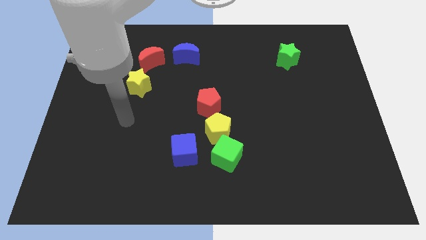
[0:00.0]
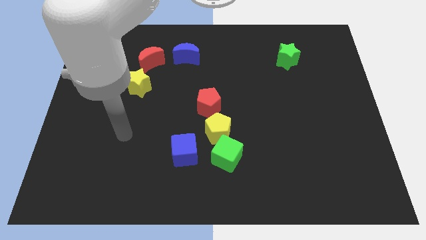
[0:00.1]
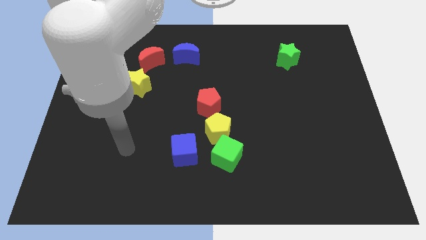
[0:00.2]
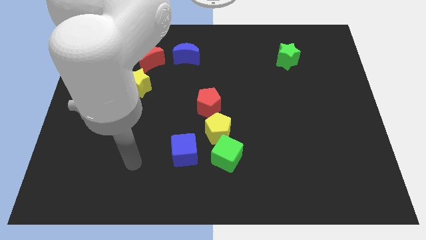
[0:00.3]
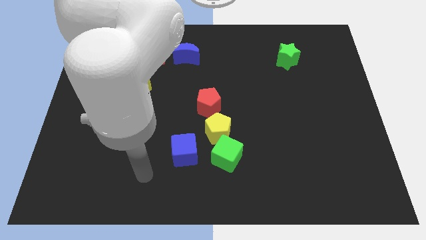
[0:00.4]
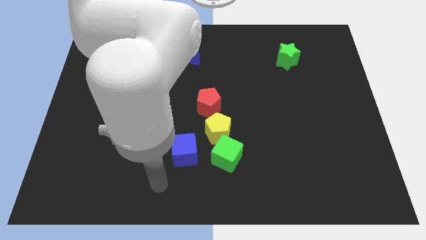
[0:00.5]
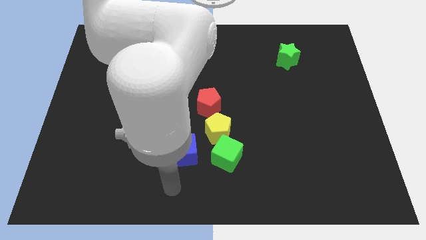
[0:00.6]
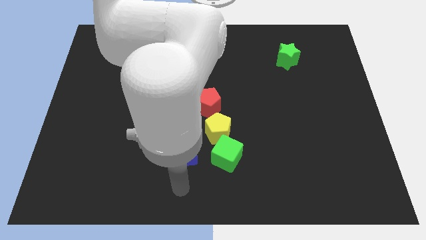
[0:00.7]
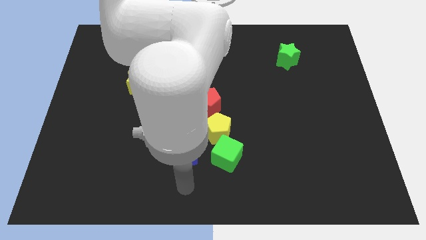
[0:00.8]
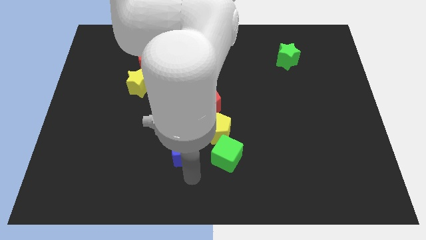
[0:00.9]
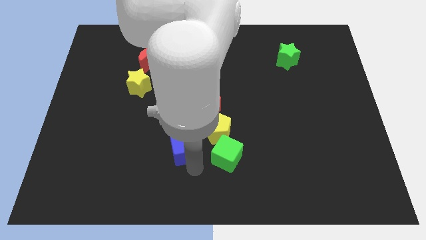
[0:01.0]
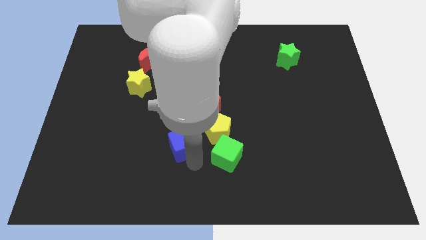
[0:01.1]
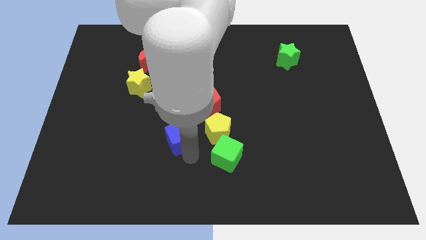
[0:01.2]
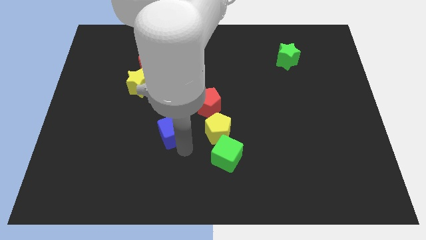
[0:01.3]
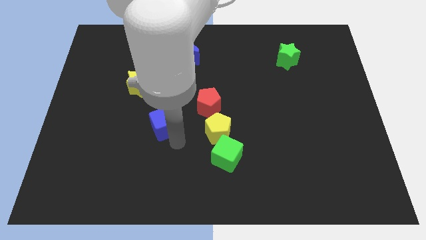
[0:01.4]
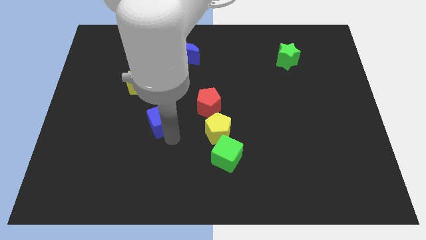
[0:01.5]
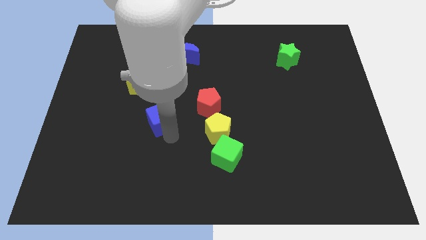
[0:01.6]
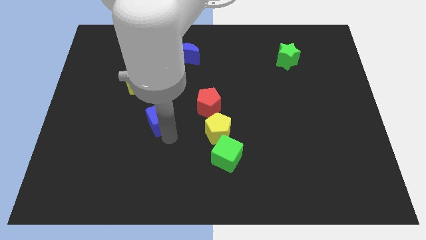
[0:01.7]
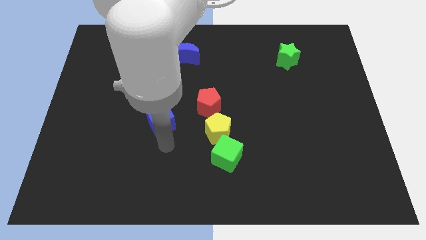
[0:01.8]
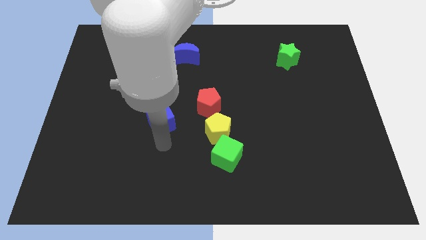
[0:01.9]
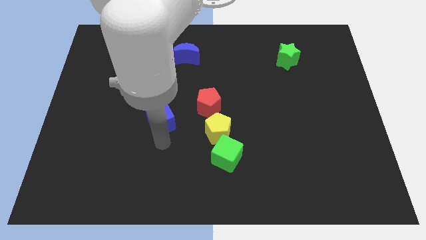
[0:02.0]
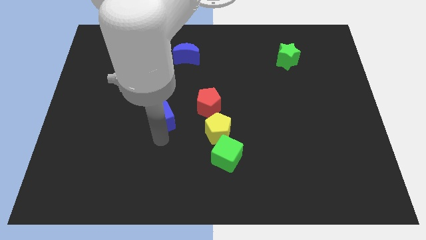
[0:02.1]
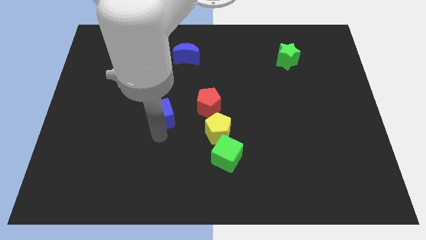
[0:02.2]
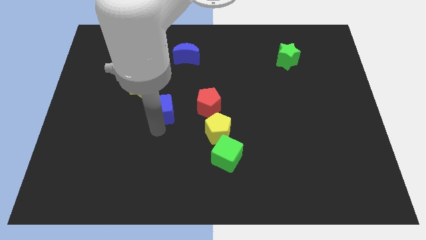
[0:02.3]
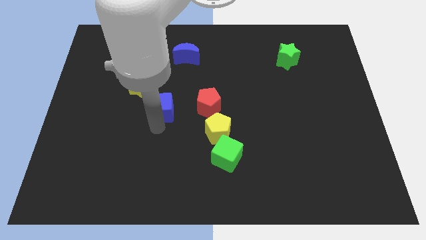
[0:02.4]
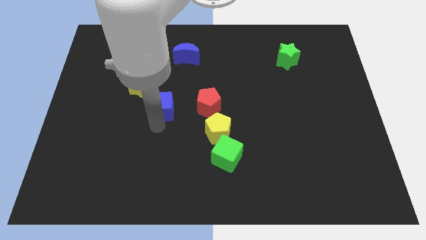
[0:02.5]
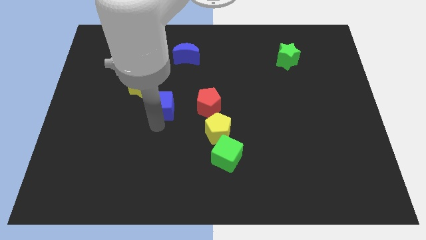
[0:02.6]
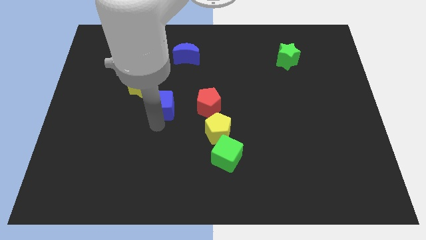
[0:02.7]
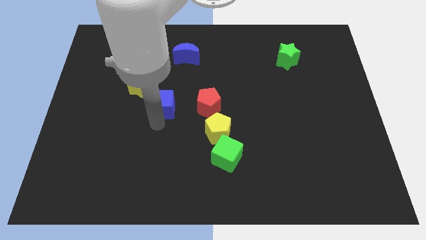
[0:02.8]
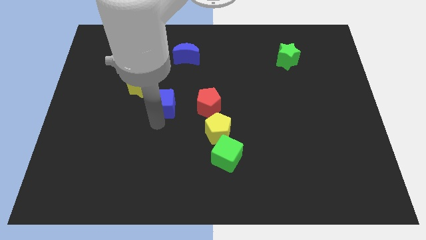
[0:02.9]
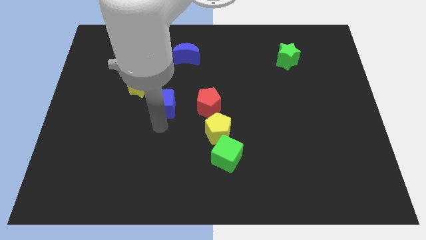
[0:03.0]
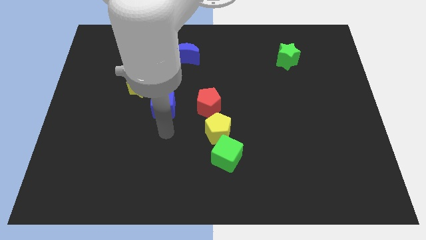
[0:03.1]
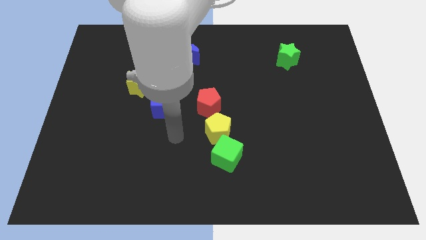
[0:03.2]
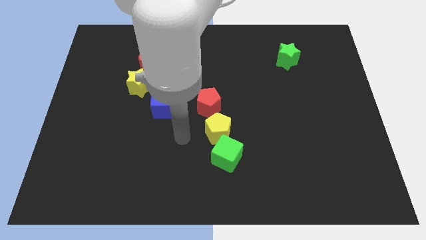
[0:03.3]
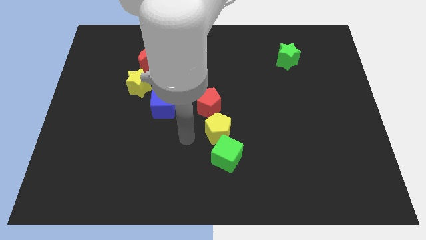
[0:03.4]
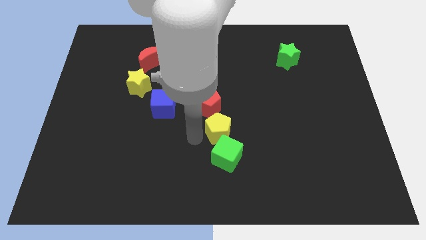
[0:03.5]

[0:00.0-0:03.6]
place the blue cube to the bottom right of yellow star

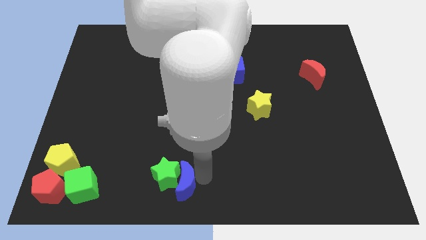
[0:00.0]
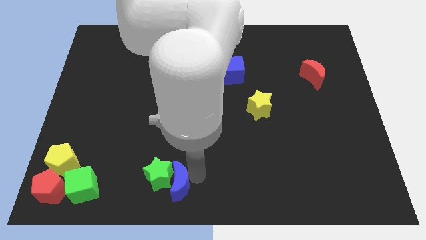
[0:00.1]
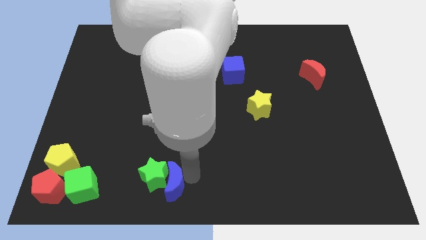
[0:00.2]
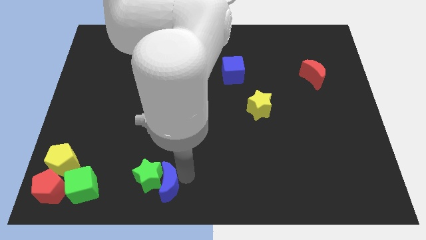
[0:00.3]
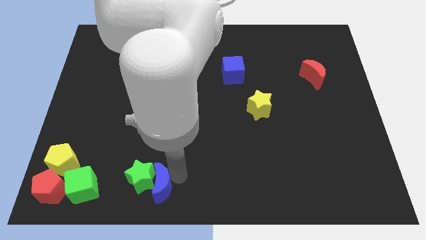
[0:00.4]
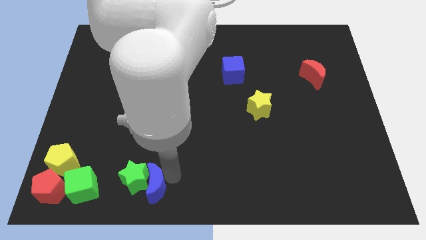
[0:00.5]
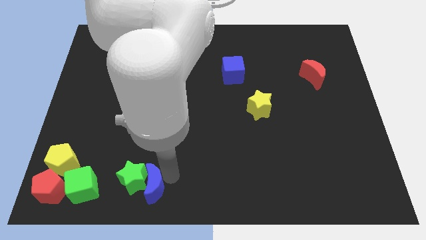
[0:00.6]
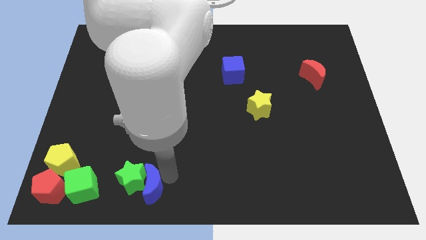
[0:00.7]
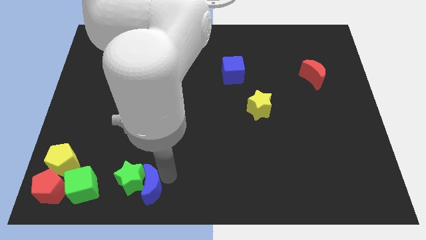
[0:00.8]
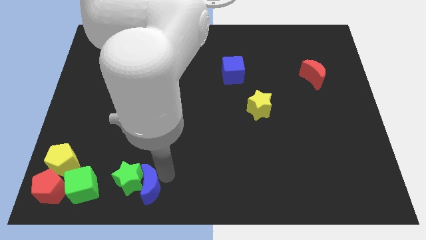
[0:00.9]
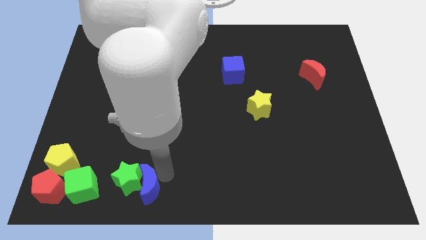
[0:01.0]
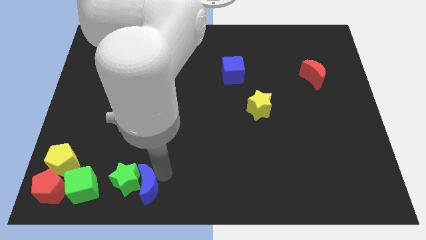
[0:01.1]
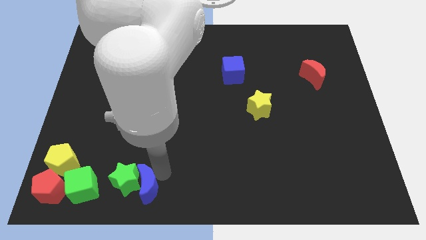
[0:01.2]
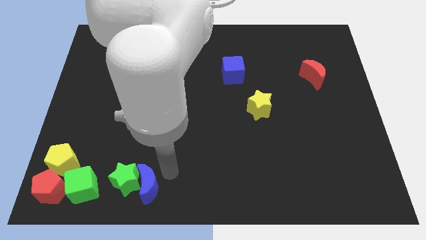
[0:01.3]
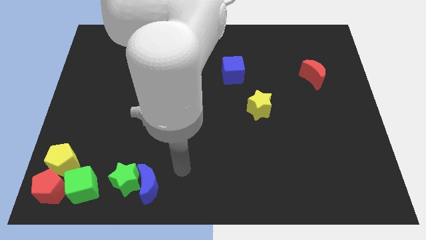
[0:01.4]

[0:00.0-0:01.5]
put the green star along with the blue crescent to the right of the group of blocks

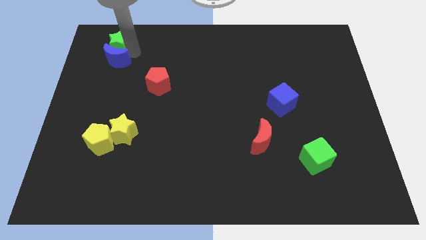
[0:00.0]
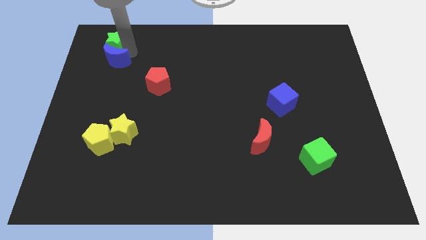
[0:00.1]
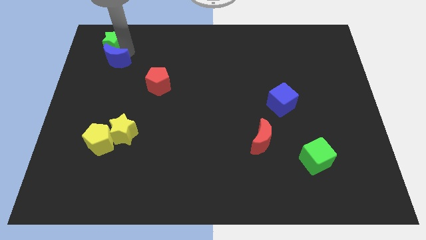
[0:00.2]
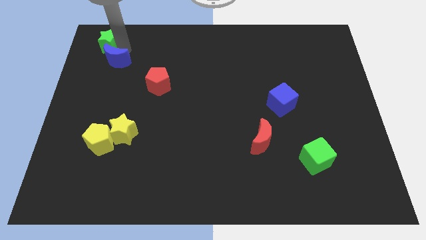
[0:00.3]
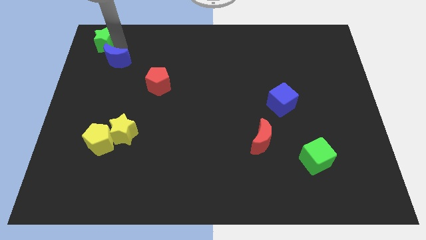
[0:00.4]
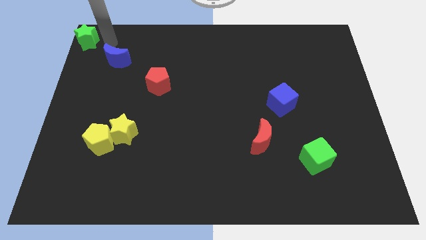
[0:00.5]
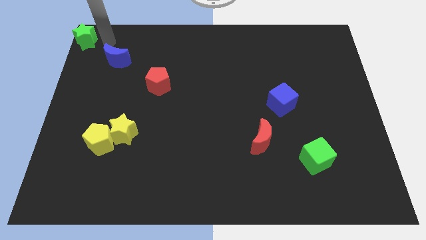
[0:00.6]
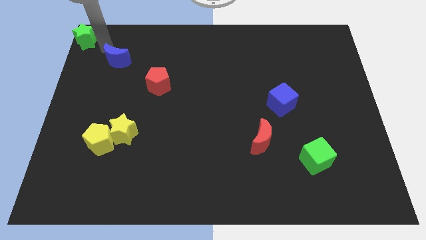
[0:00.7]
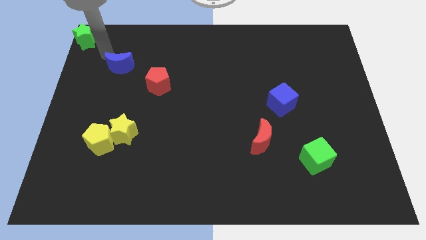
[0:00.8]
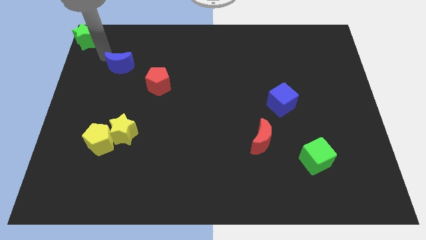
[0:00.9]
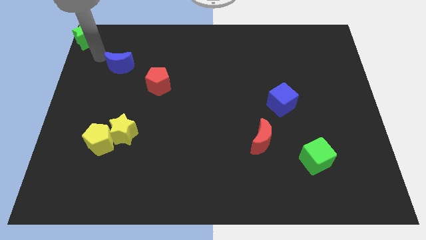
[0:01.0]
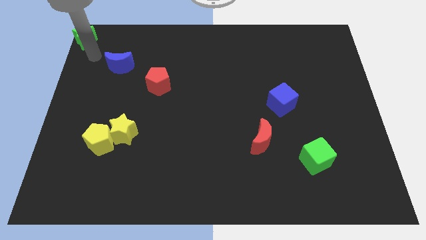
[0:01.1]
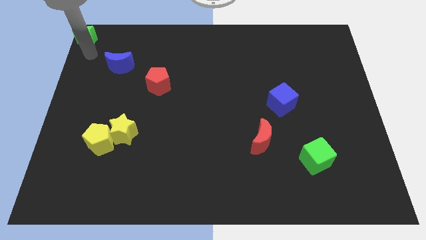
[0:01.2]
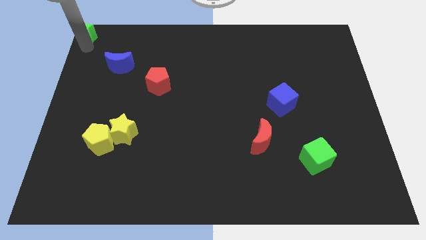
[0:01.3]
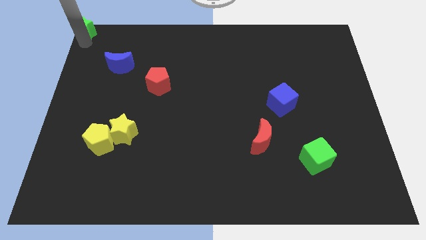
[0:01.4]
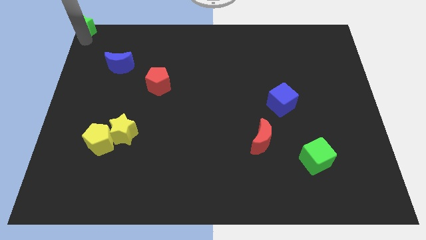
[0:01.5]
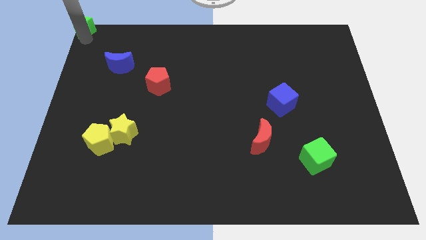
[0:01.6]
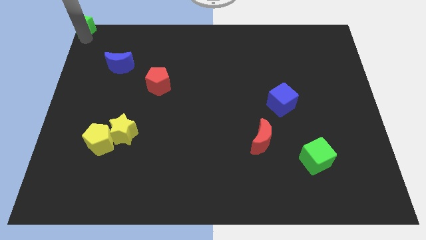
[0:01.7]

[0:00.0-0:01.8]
move the green star to the top left of the board

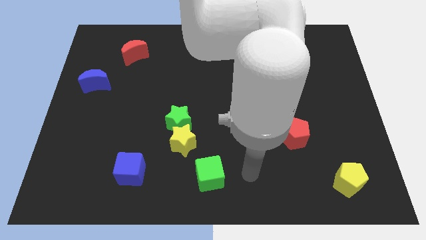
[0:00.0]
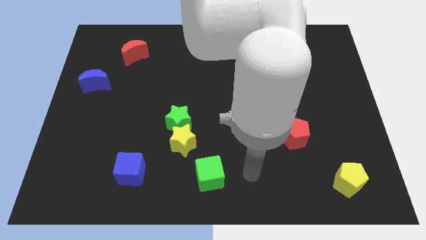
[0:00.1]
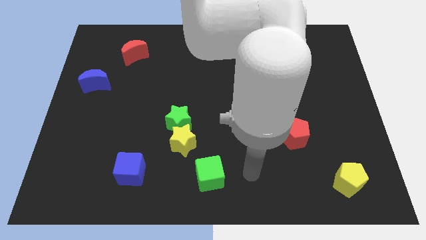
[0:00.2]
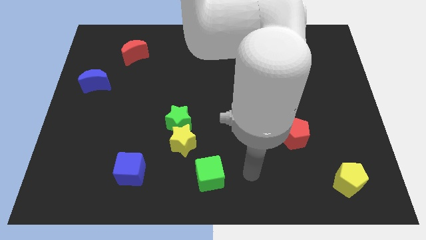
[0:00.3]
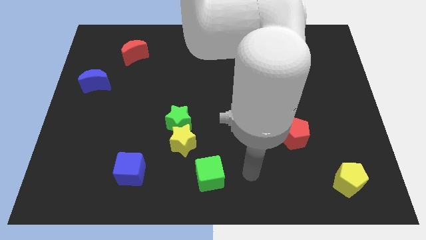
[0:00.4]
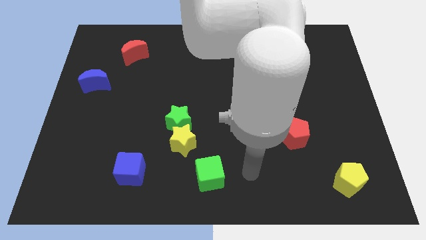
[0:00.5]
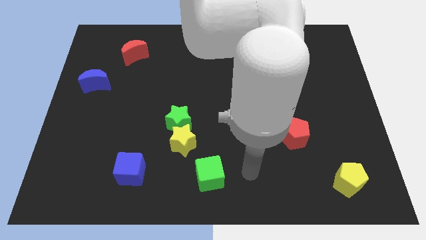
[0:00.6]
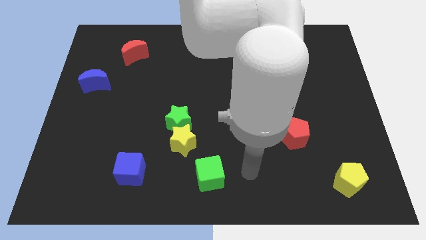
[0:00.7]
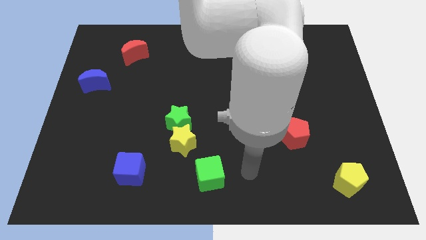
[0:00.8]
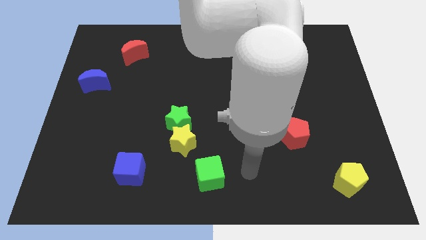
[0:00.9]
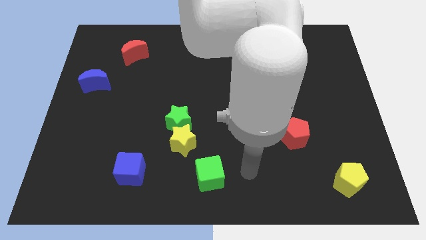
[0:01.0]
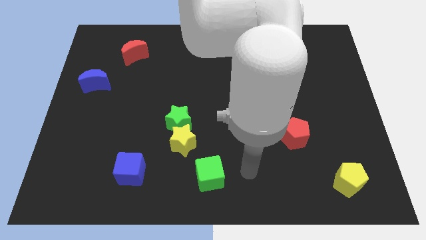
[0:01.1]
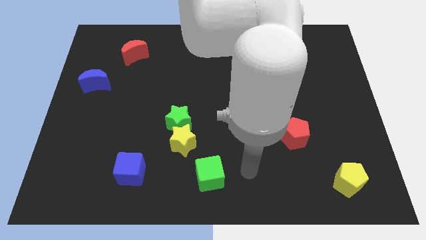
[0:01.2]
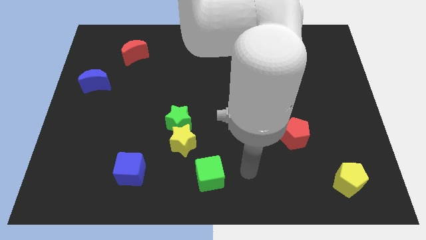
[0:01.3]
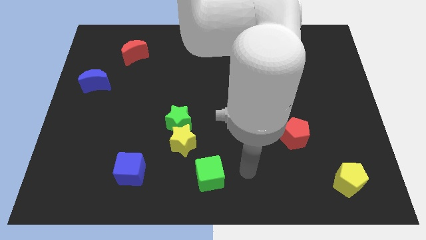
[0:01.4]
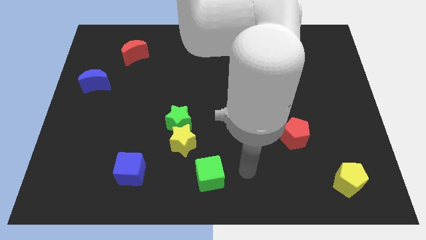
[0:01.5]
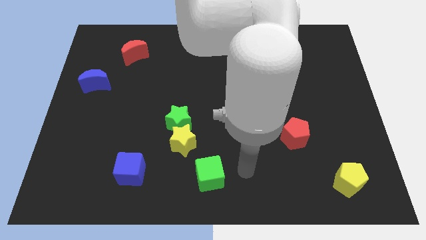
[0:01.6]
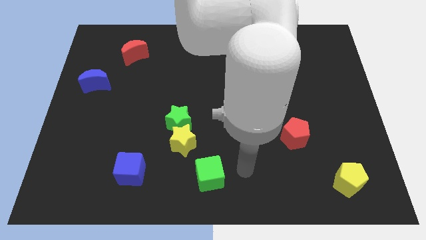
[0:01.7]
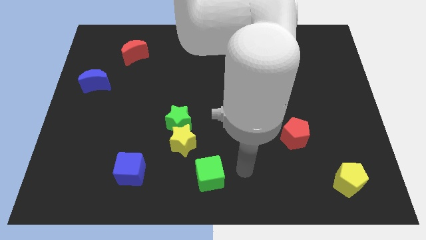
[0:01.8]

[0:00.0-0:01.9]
point your arm to the right of green cube
